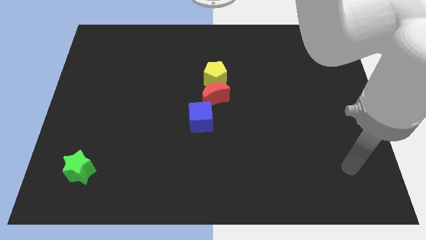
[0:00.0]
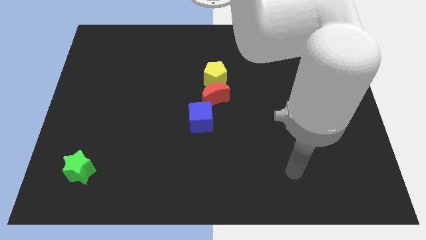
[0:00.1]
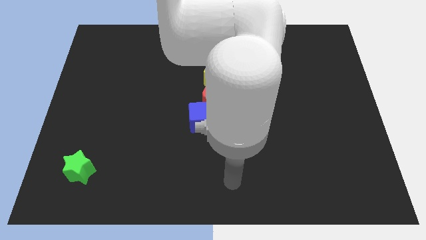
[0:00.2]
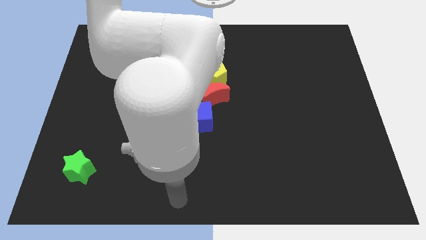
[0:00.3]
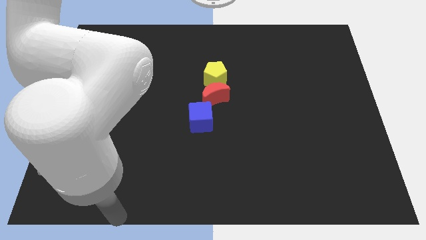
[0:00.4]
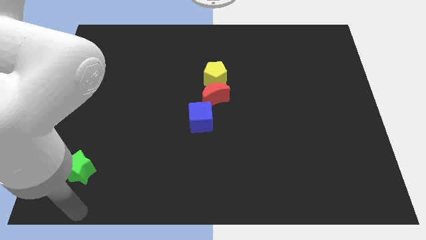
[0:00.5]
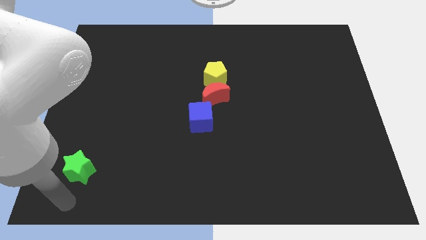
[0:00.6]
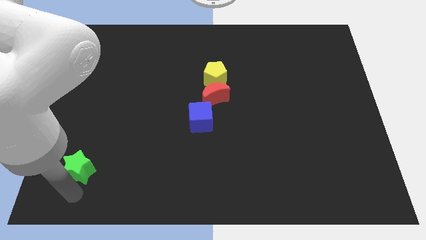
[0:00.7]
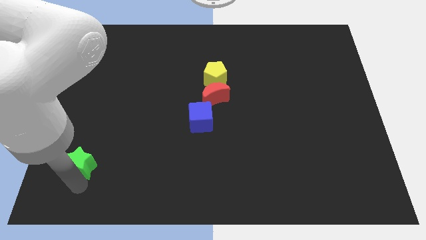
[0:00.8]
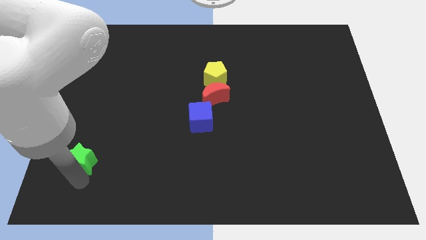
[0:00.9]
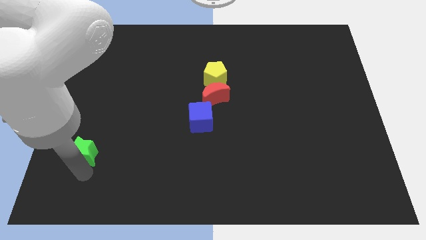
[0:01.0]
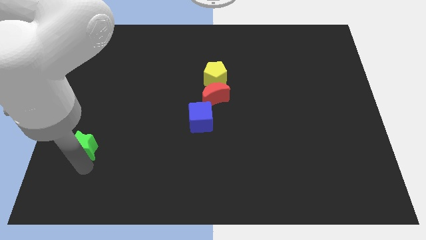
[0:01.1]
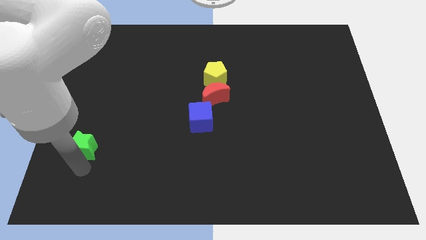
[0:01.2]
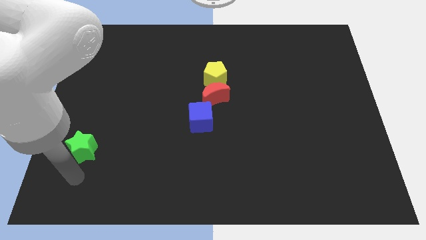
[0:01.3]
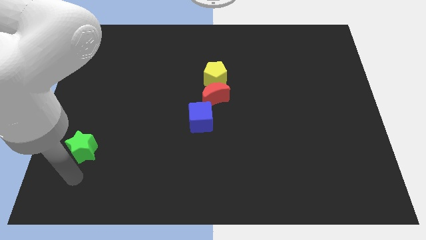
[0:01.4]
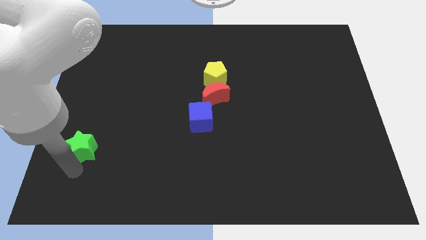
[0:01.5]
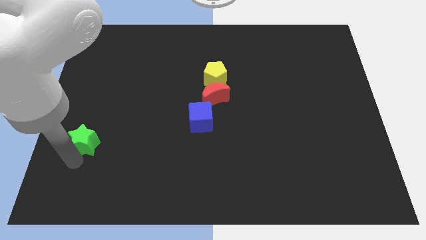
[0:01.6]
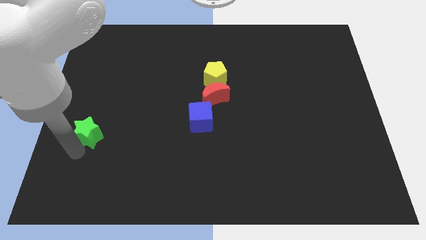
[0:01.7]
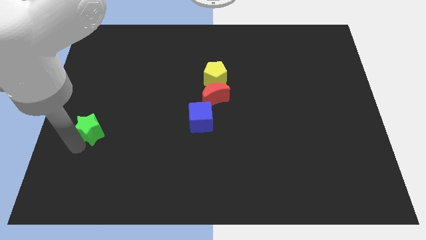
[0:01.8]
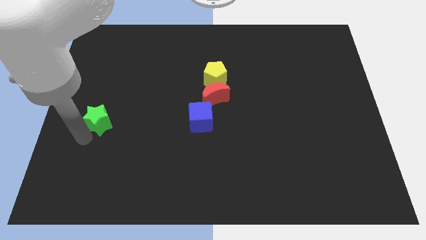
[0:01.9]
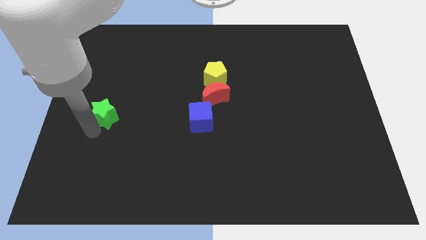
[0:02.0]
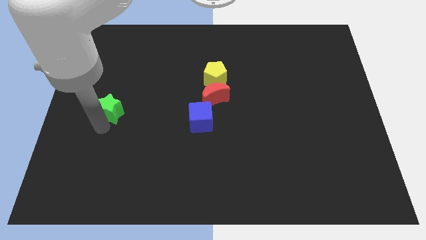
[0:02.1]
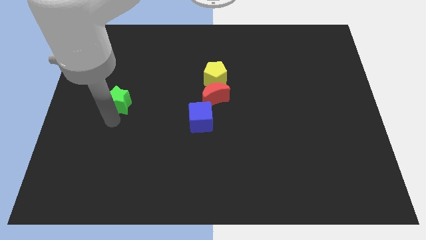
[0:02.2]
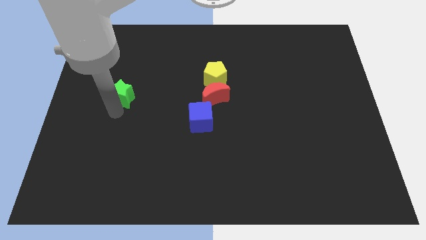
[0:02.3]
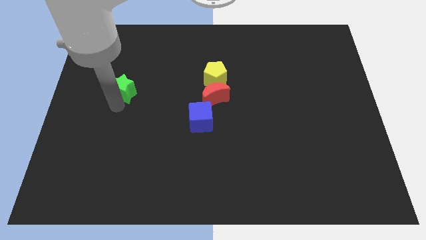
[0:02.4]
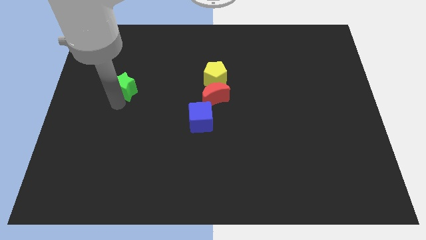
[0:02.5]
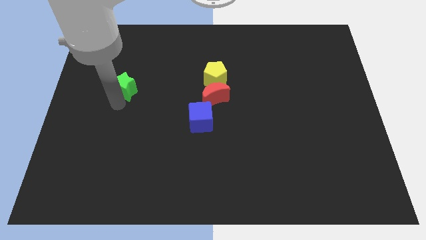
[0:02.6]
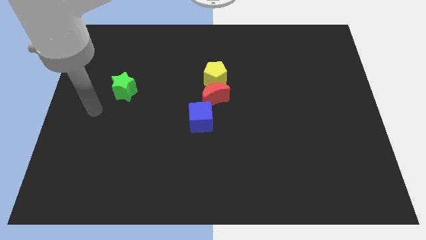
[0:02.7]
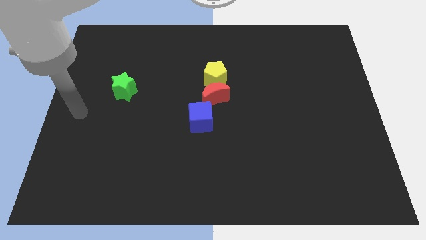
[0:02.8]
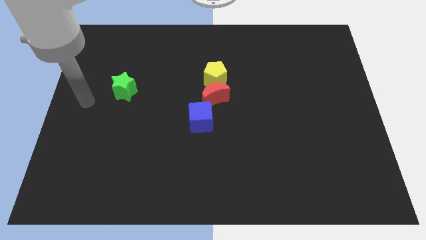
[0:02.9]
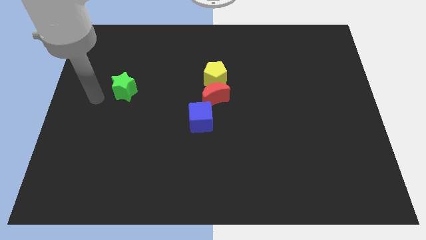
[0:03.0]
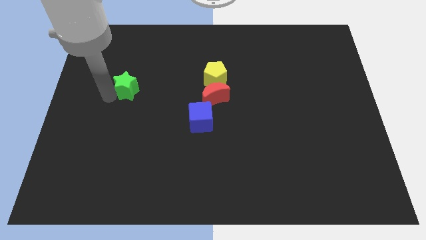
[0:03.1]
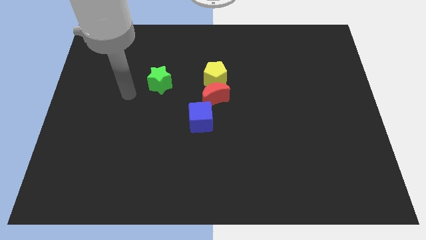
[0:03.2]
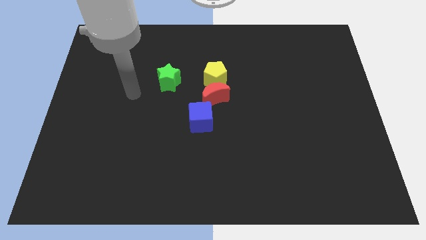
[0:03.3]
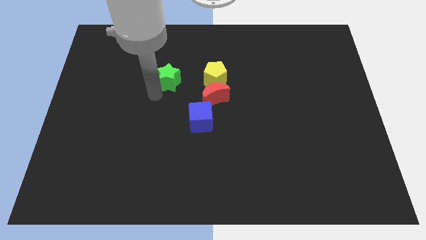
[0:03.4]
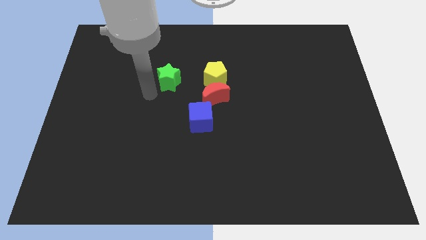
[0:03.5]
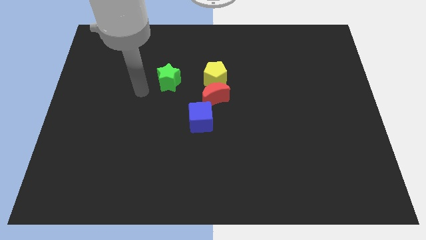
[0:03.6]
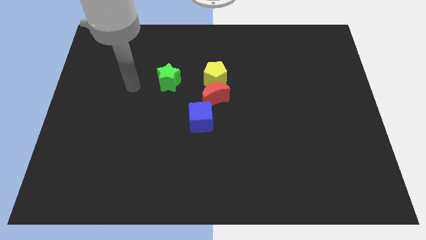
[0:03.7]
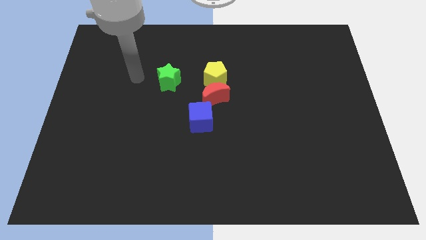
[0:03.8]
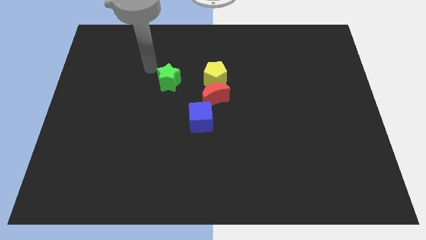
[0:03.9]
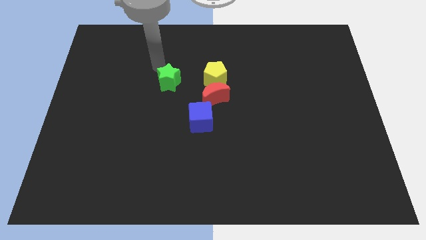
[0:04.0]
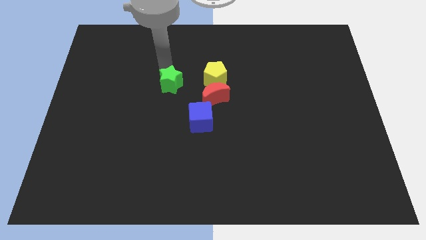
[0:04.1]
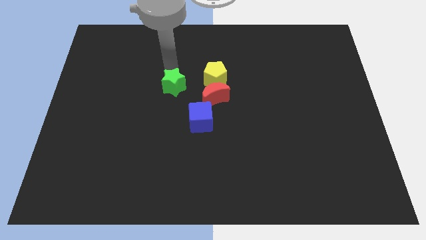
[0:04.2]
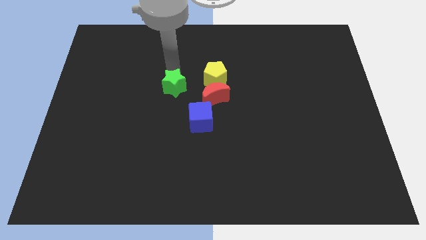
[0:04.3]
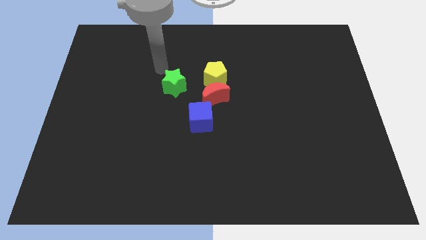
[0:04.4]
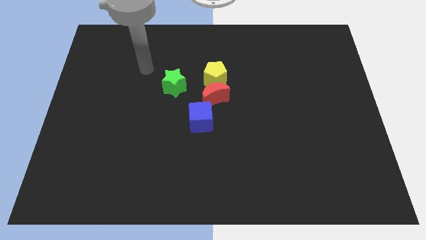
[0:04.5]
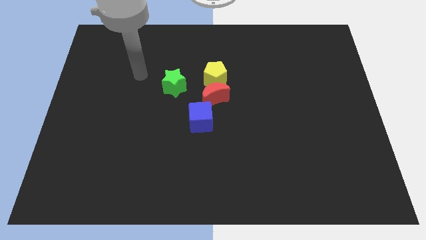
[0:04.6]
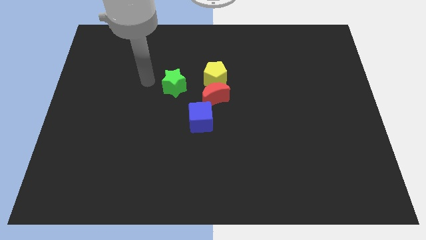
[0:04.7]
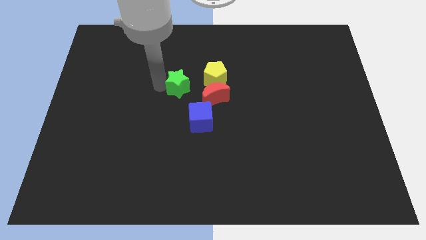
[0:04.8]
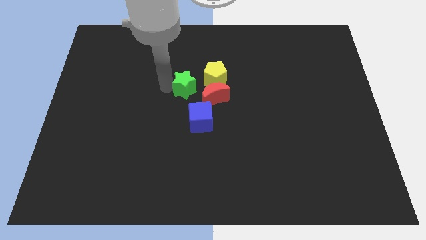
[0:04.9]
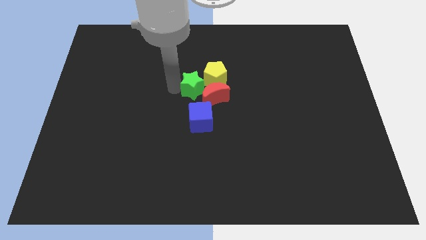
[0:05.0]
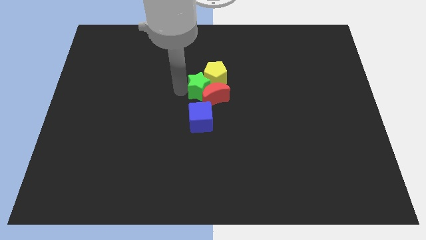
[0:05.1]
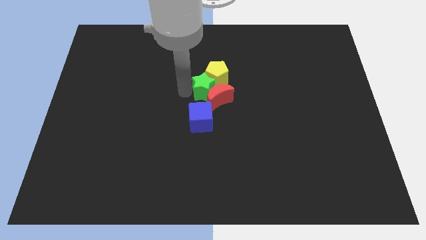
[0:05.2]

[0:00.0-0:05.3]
move the green star towards the red moon

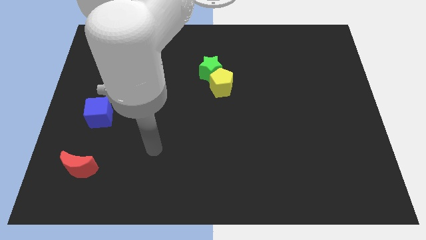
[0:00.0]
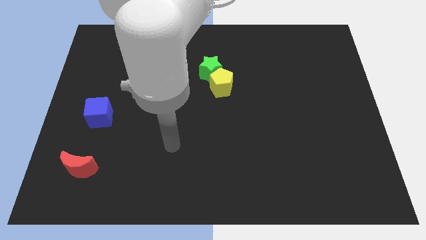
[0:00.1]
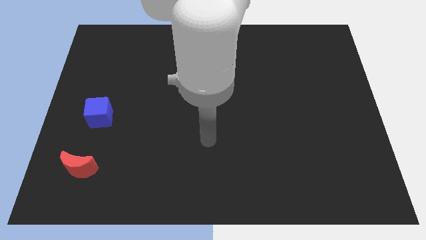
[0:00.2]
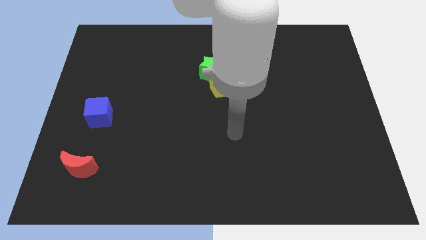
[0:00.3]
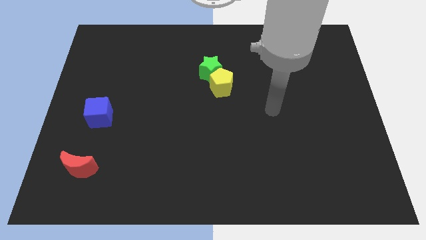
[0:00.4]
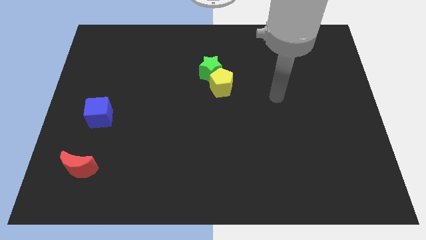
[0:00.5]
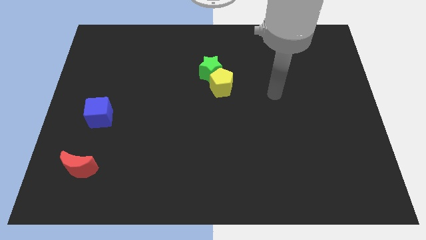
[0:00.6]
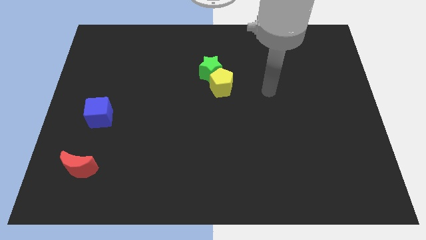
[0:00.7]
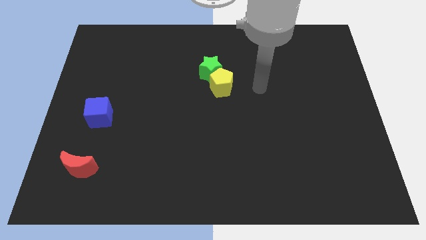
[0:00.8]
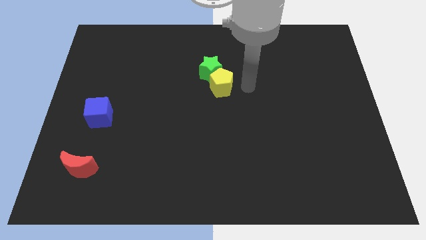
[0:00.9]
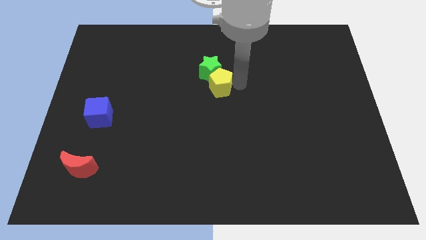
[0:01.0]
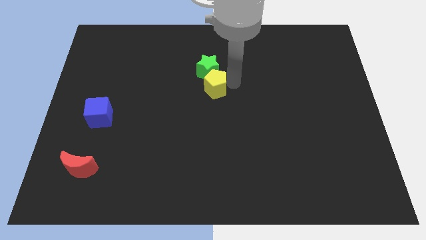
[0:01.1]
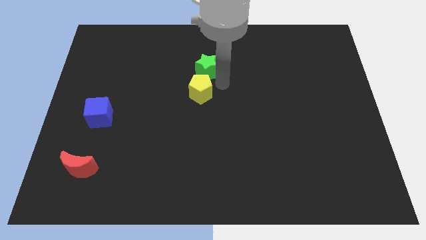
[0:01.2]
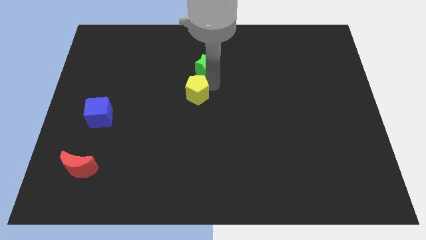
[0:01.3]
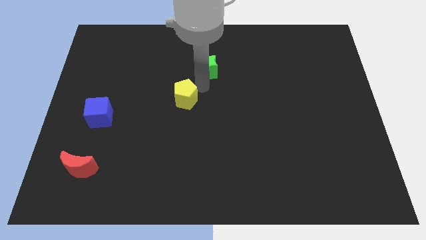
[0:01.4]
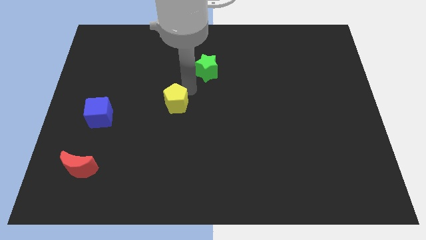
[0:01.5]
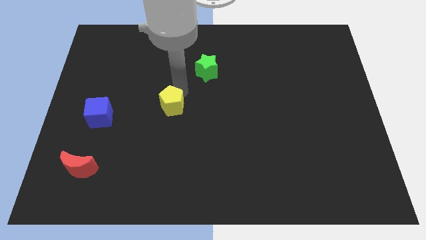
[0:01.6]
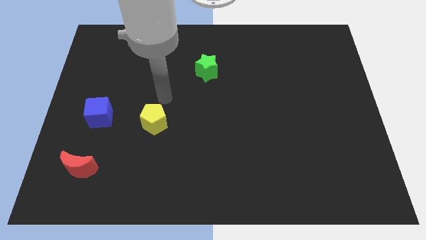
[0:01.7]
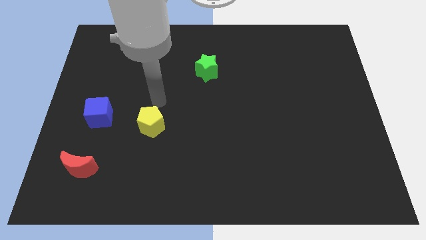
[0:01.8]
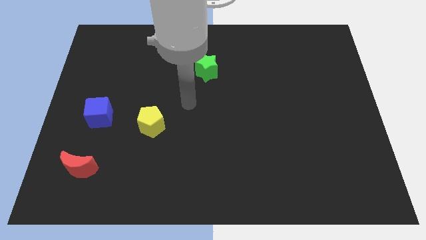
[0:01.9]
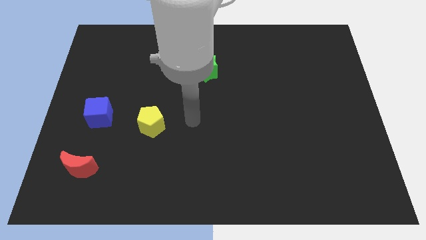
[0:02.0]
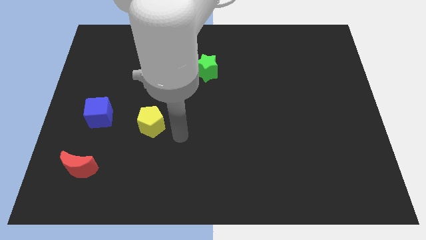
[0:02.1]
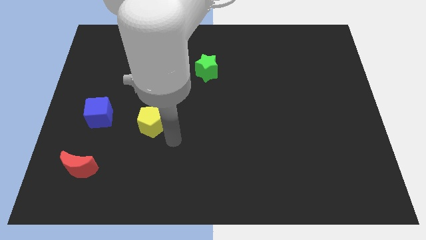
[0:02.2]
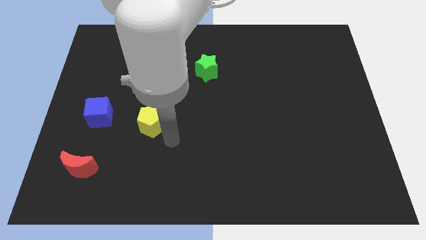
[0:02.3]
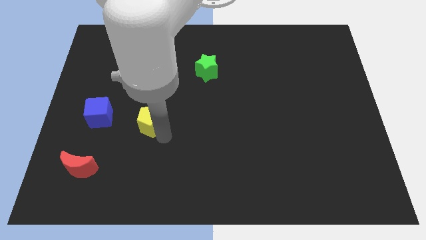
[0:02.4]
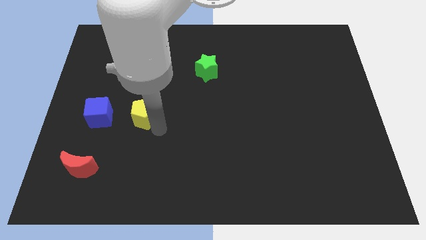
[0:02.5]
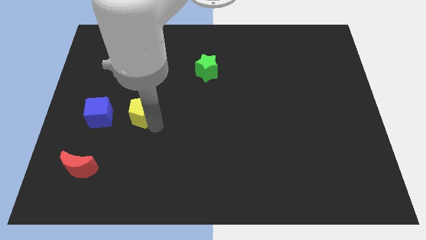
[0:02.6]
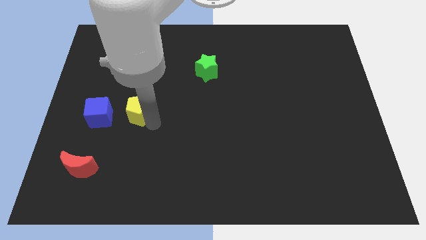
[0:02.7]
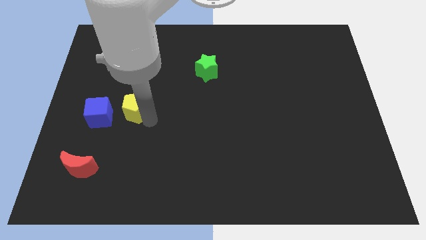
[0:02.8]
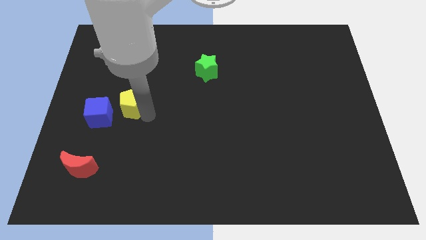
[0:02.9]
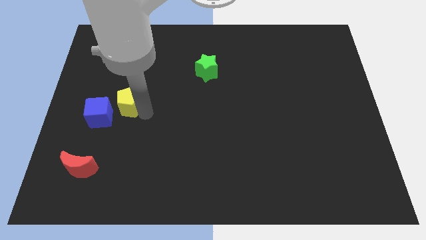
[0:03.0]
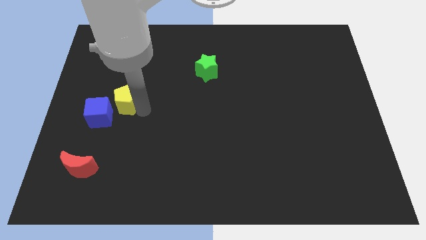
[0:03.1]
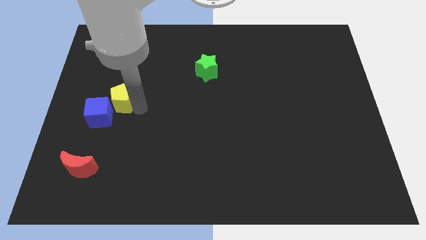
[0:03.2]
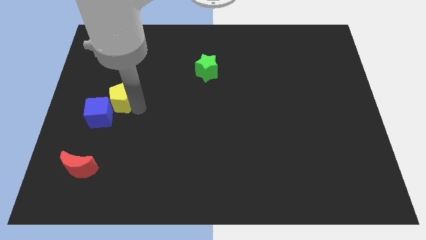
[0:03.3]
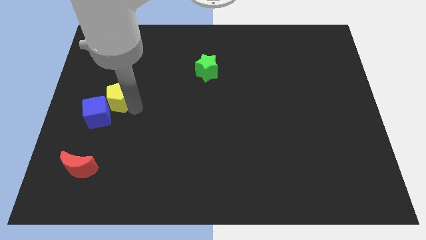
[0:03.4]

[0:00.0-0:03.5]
move the yellow block to the cube
